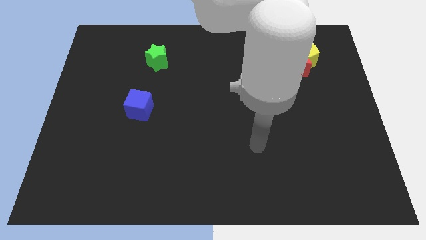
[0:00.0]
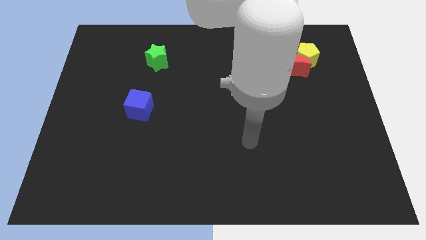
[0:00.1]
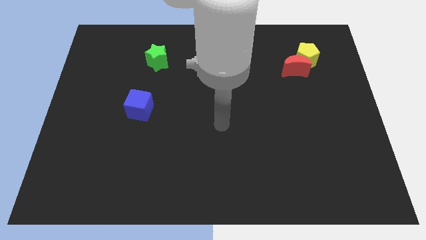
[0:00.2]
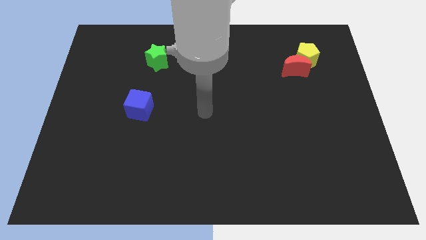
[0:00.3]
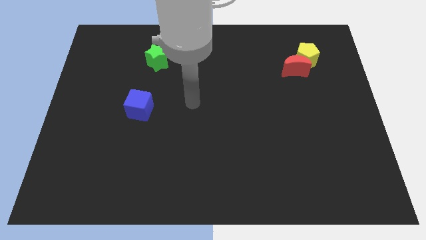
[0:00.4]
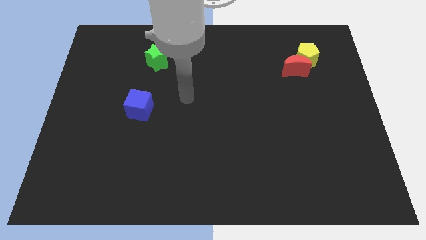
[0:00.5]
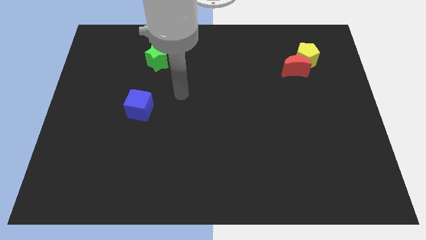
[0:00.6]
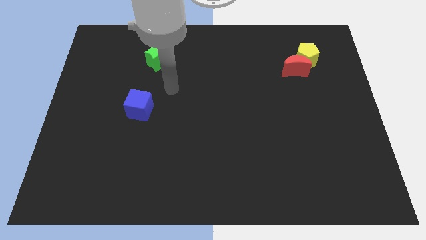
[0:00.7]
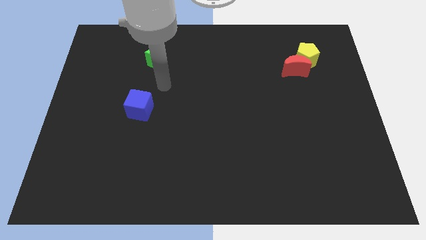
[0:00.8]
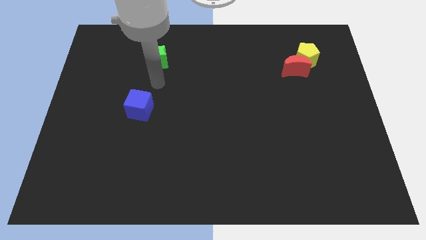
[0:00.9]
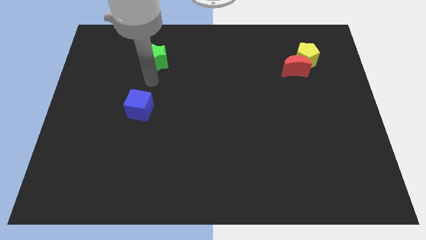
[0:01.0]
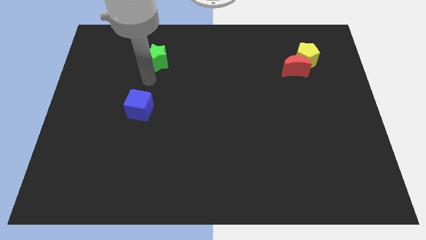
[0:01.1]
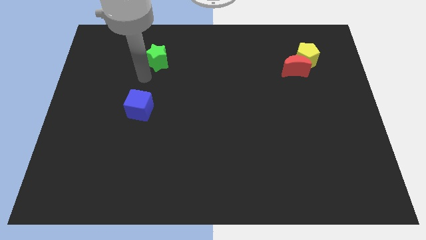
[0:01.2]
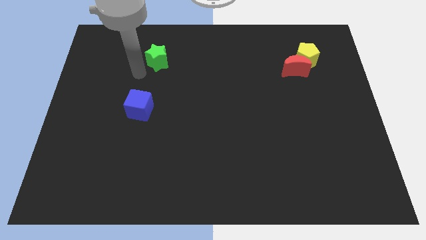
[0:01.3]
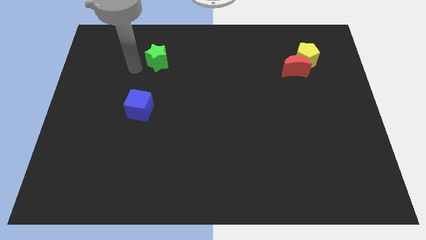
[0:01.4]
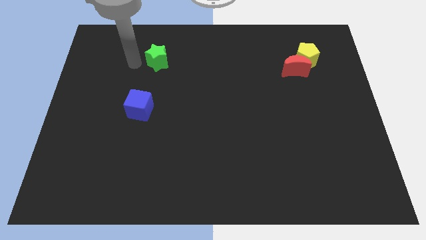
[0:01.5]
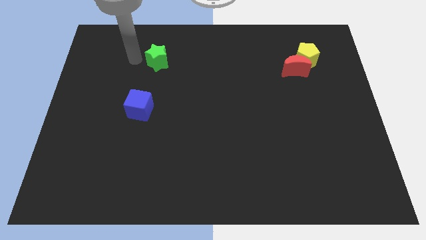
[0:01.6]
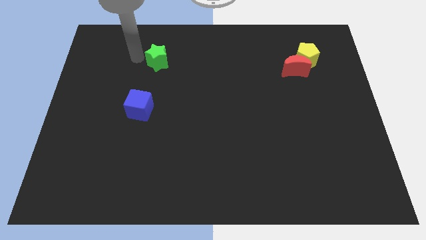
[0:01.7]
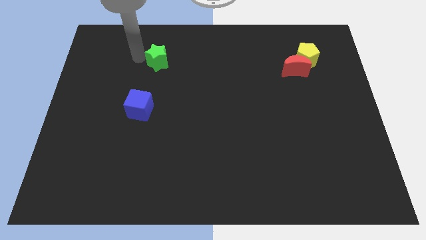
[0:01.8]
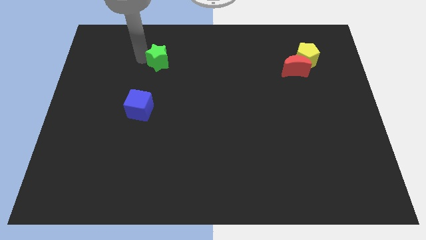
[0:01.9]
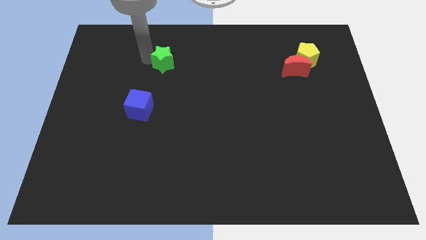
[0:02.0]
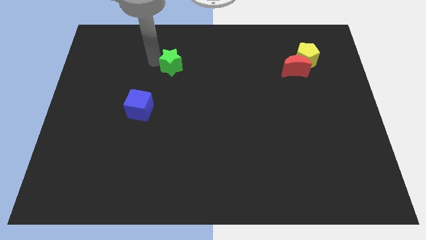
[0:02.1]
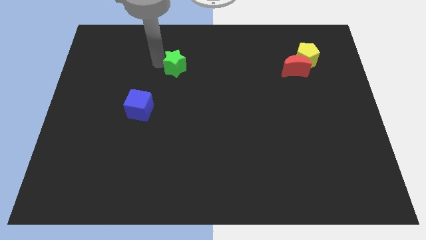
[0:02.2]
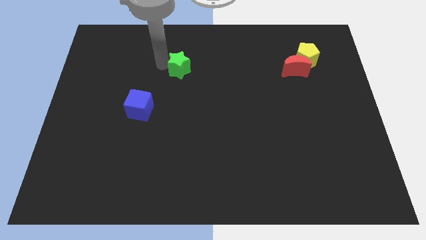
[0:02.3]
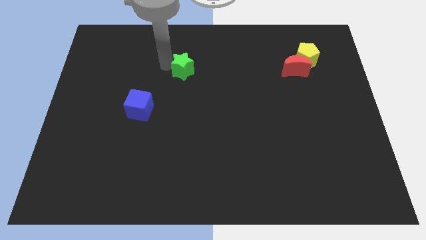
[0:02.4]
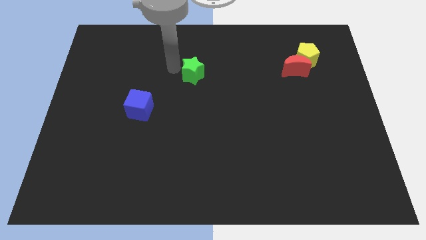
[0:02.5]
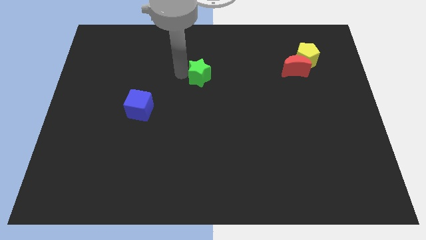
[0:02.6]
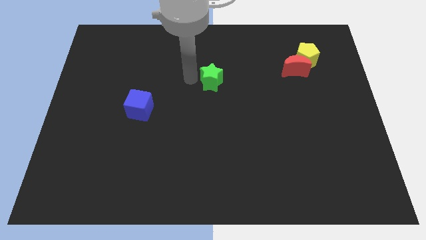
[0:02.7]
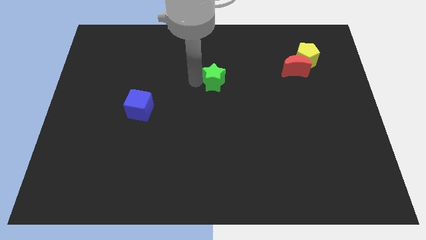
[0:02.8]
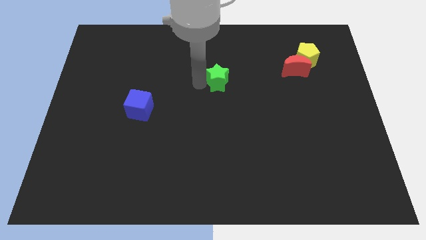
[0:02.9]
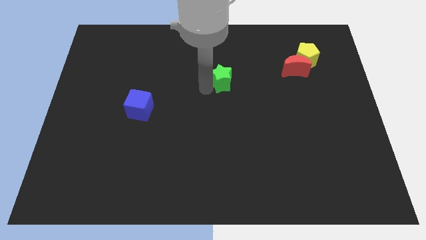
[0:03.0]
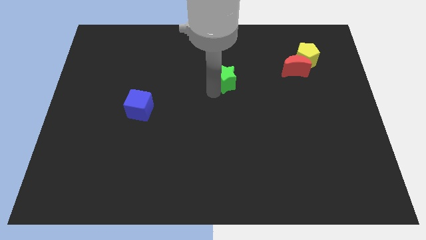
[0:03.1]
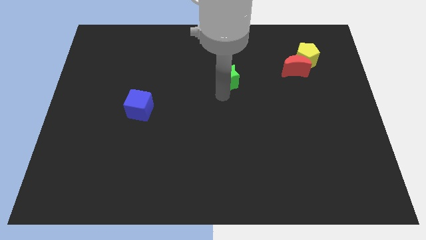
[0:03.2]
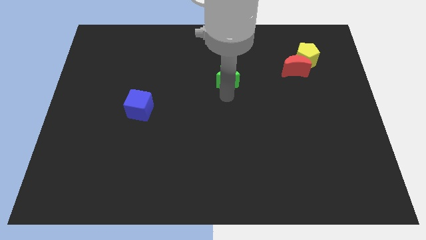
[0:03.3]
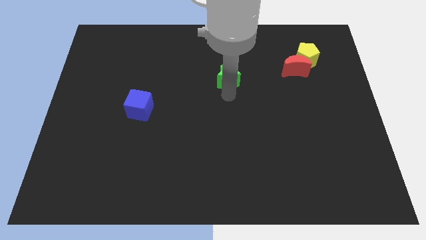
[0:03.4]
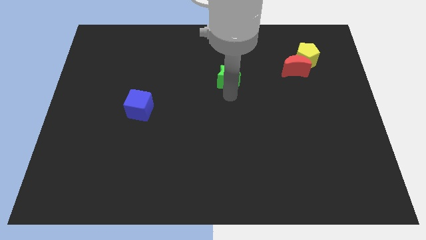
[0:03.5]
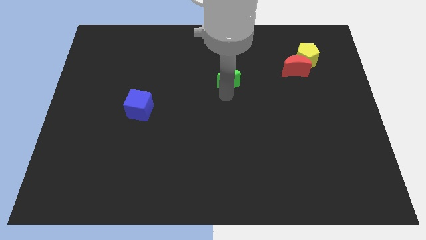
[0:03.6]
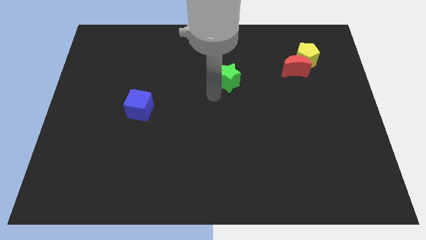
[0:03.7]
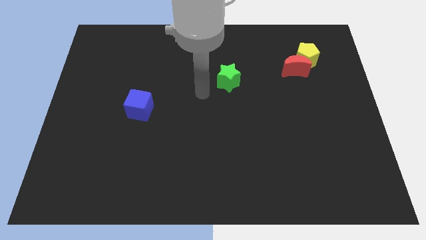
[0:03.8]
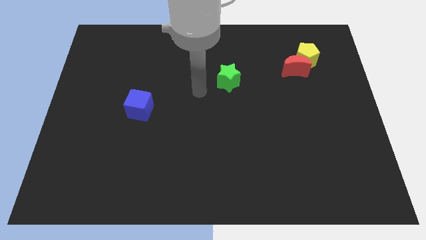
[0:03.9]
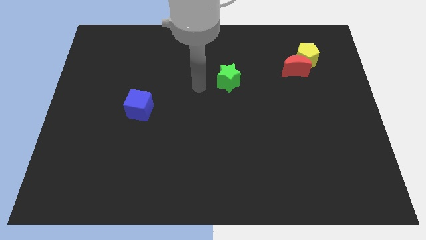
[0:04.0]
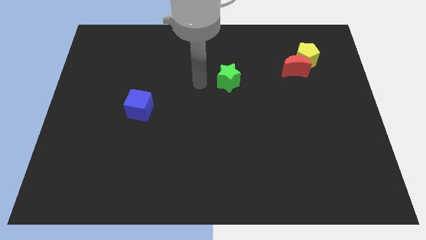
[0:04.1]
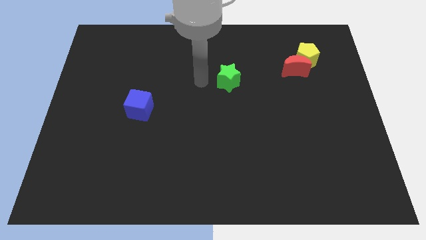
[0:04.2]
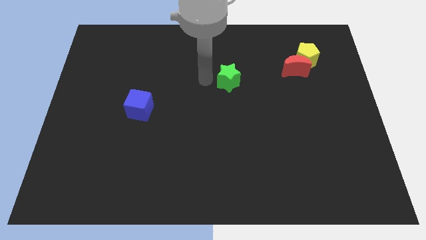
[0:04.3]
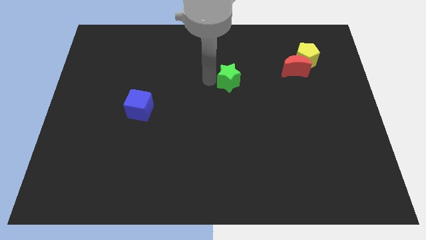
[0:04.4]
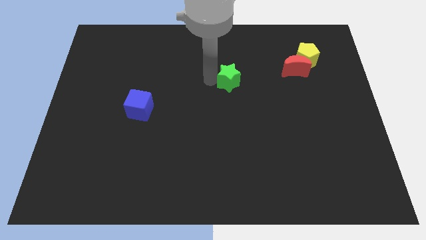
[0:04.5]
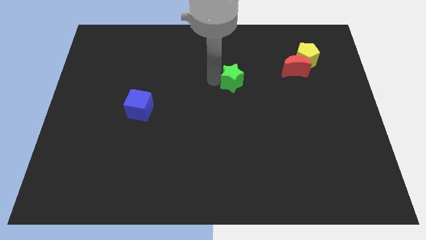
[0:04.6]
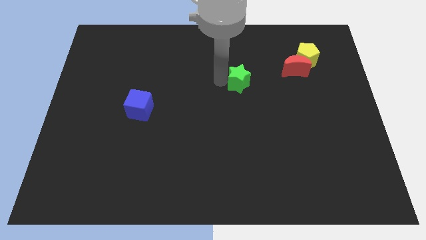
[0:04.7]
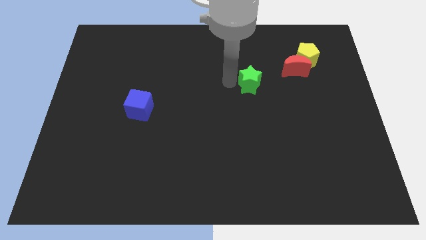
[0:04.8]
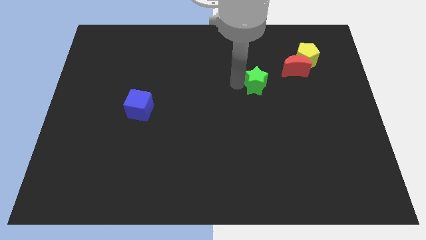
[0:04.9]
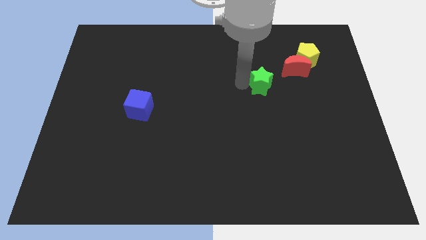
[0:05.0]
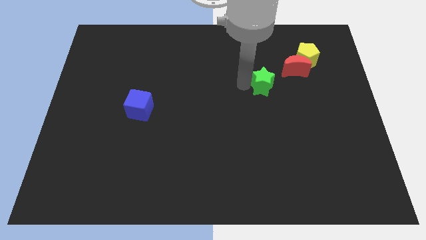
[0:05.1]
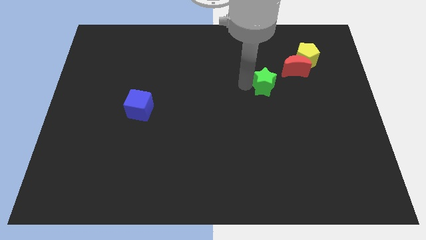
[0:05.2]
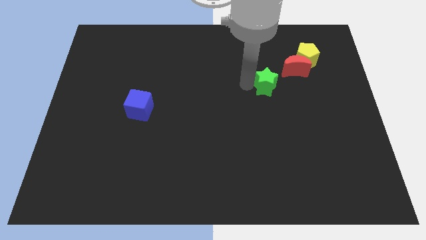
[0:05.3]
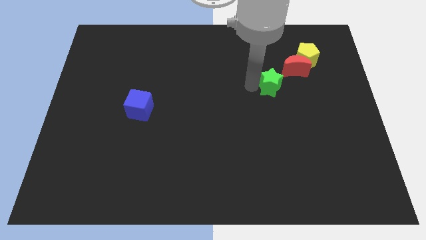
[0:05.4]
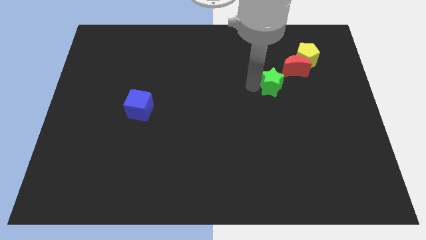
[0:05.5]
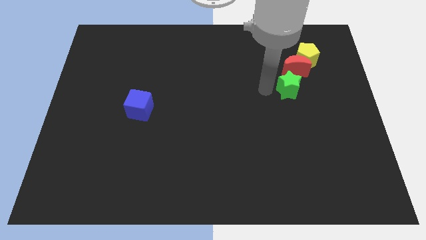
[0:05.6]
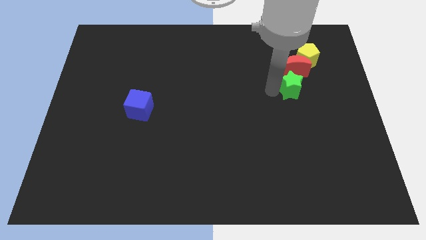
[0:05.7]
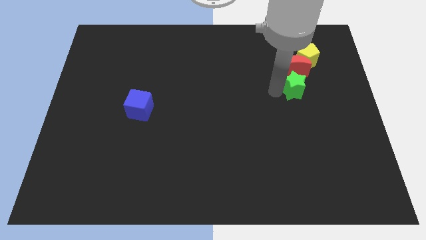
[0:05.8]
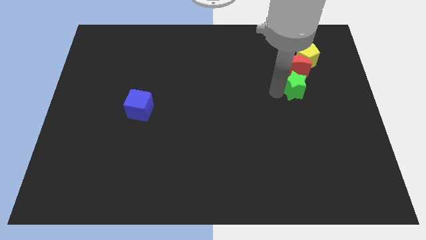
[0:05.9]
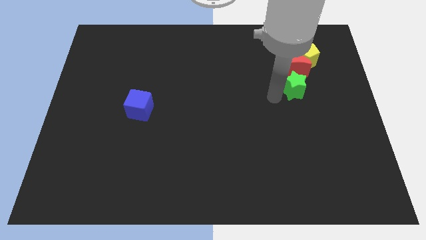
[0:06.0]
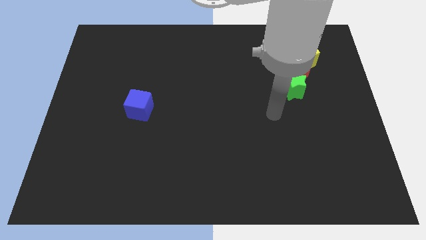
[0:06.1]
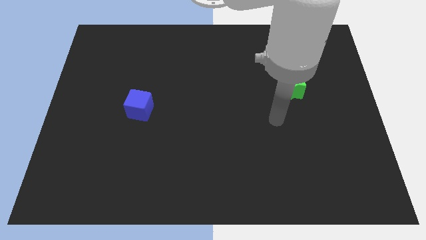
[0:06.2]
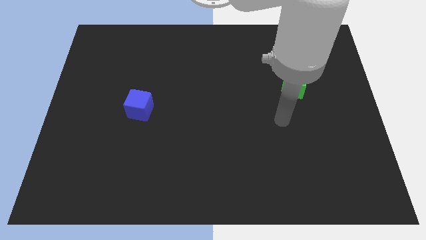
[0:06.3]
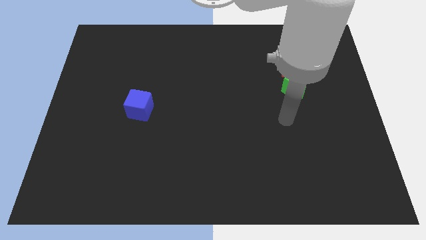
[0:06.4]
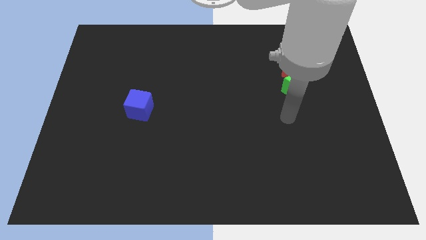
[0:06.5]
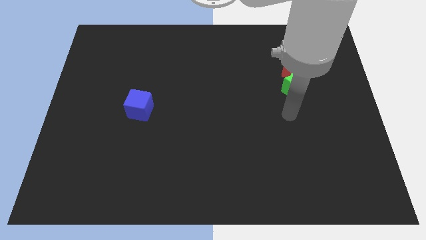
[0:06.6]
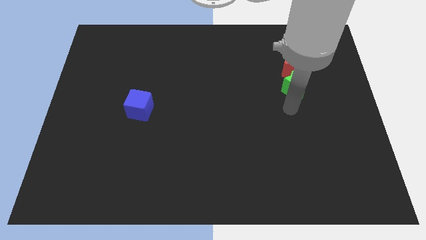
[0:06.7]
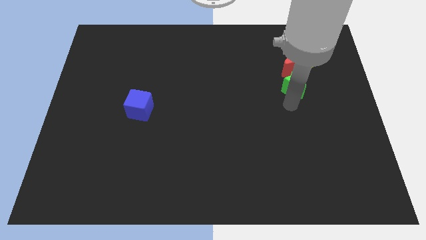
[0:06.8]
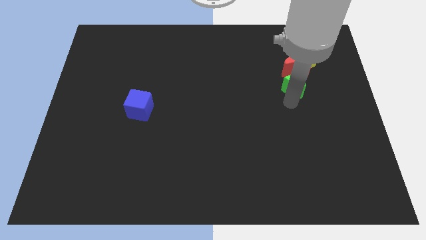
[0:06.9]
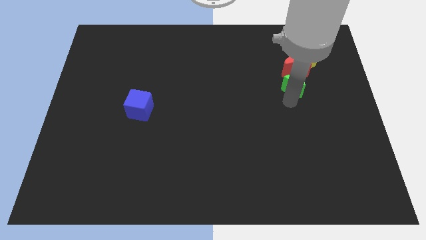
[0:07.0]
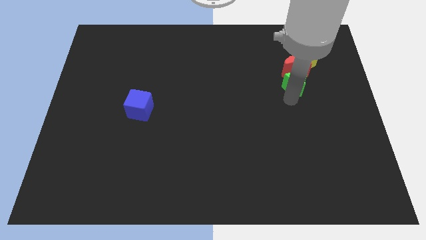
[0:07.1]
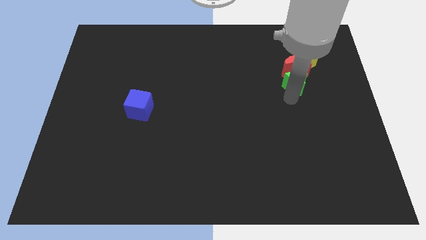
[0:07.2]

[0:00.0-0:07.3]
slide the star next to the red moon

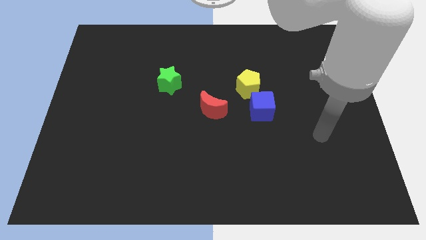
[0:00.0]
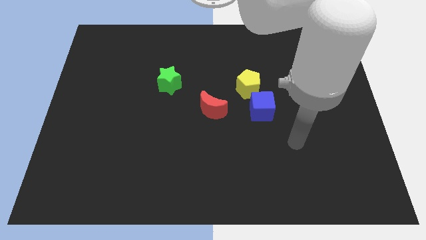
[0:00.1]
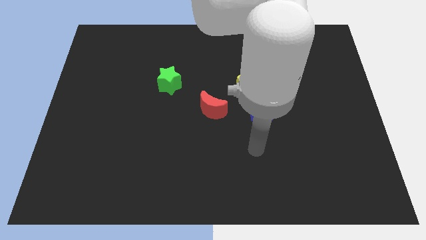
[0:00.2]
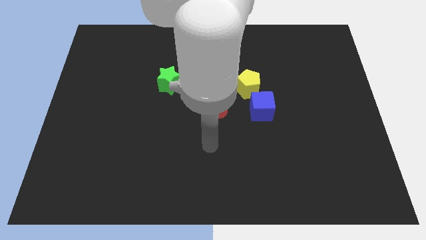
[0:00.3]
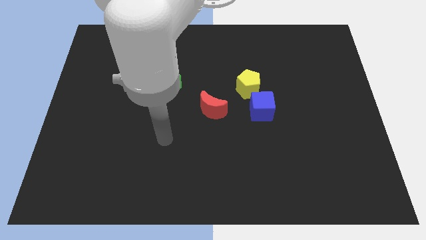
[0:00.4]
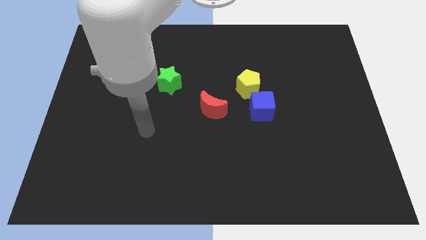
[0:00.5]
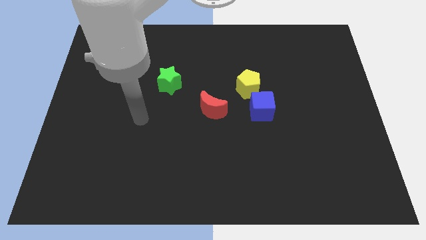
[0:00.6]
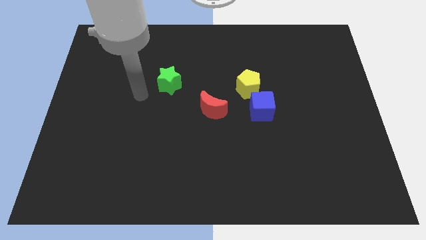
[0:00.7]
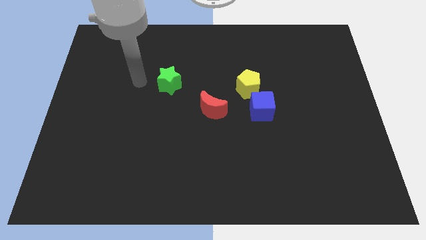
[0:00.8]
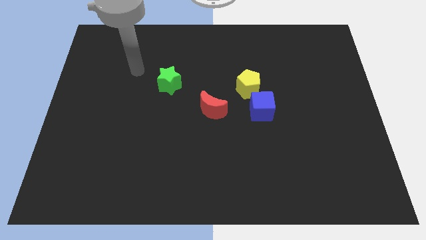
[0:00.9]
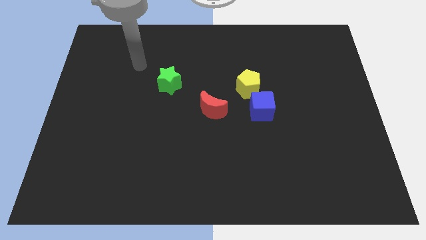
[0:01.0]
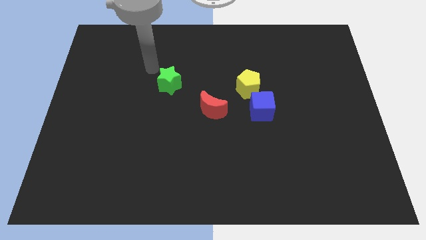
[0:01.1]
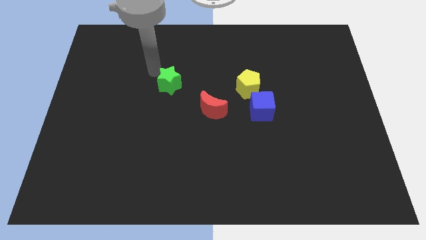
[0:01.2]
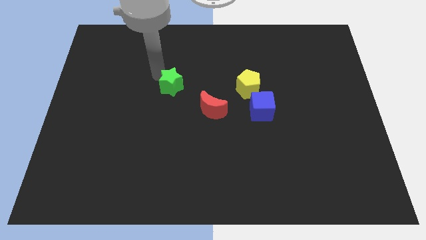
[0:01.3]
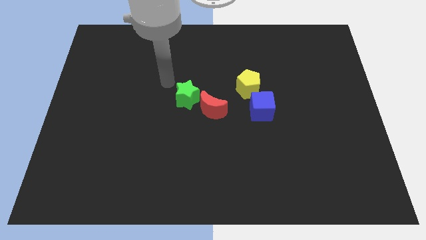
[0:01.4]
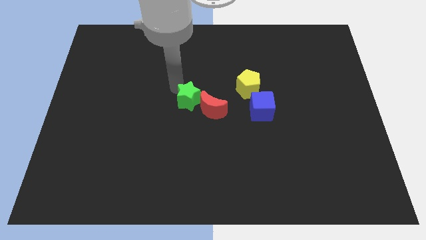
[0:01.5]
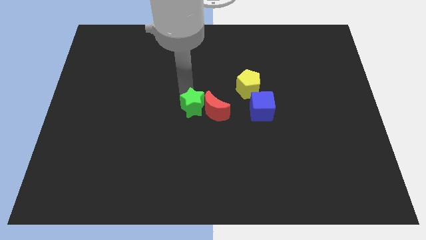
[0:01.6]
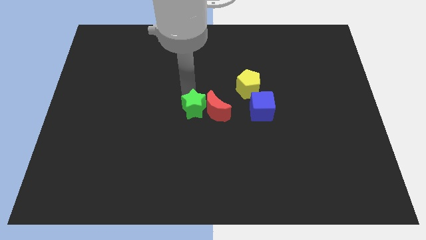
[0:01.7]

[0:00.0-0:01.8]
move the green star towards the red moon
